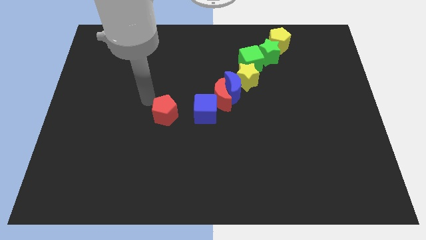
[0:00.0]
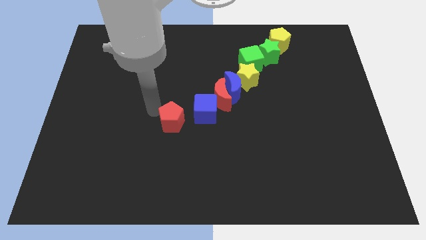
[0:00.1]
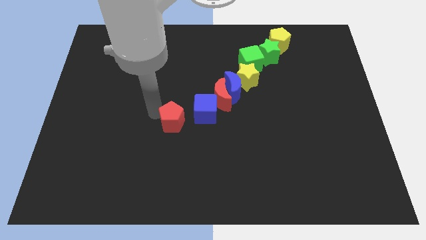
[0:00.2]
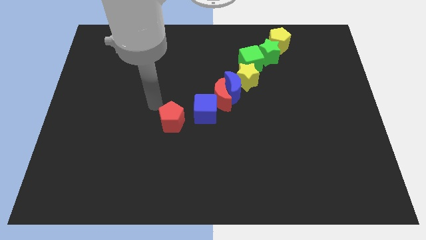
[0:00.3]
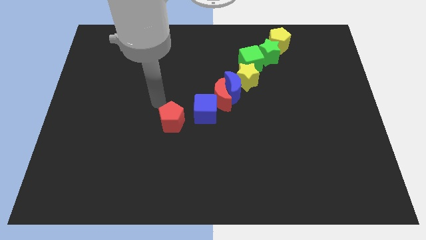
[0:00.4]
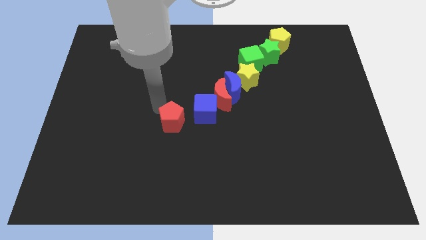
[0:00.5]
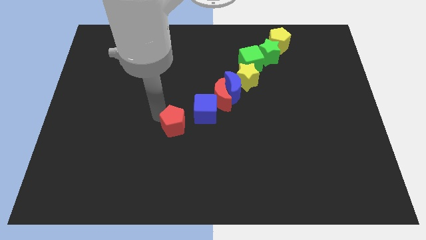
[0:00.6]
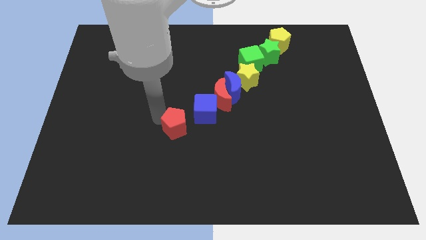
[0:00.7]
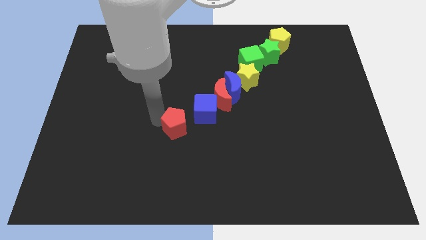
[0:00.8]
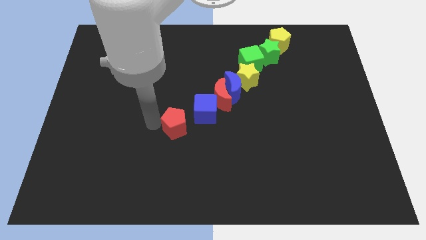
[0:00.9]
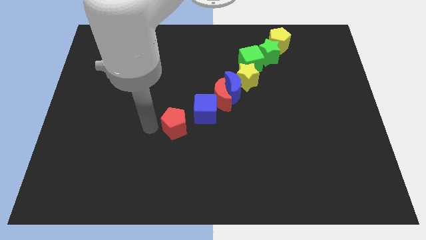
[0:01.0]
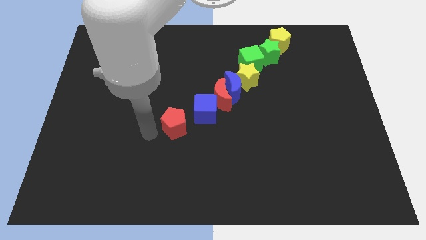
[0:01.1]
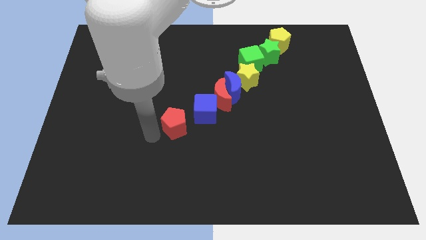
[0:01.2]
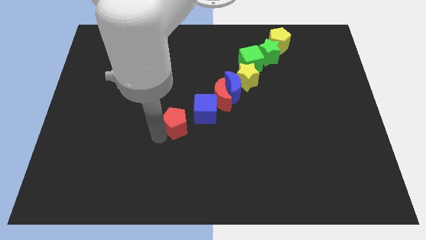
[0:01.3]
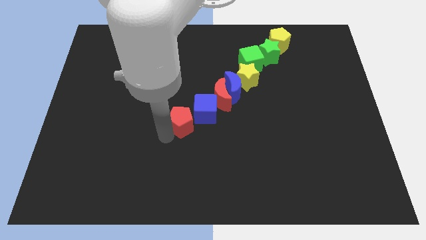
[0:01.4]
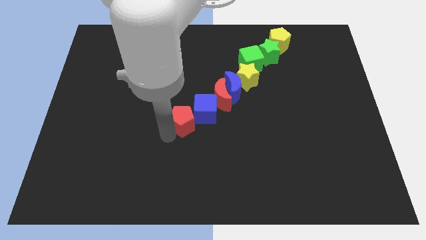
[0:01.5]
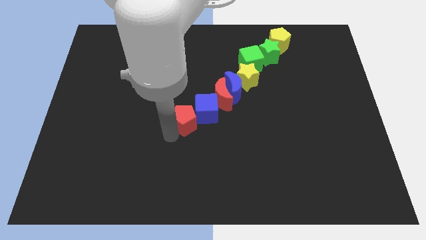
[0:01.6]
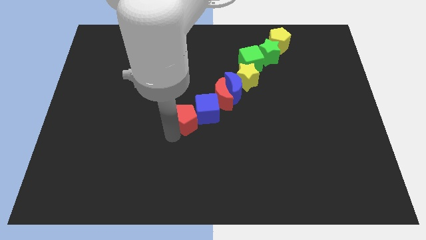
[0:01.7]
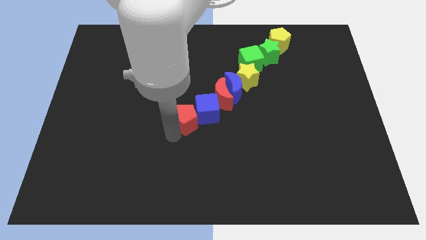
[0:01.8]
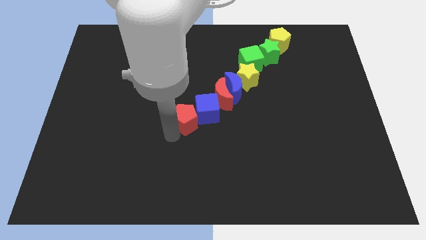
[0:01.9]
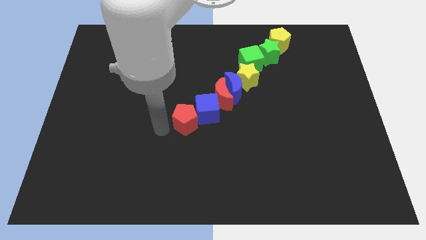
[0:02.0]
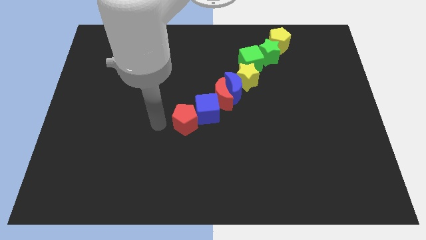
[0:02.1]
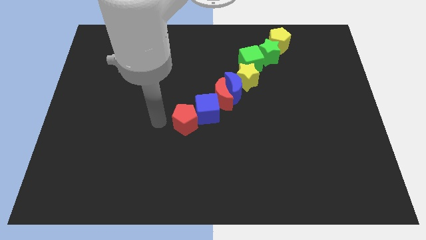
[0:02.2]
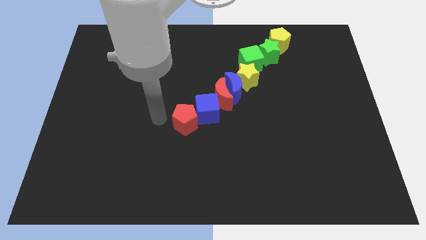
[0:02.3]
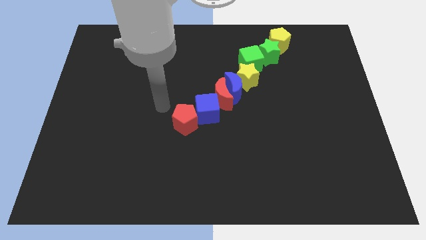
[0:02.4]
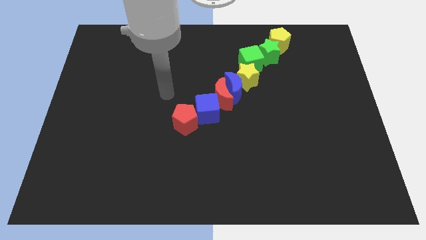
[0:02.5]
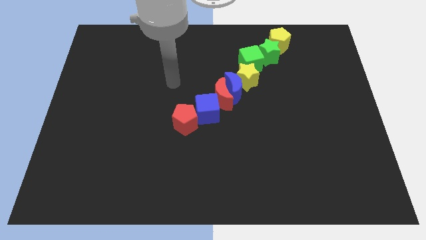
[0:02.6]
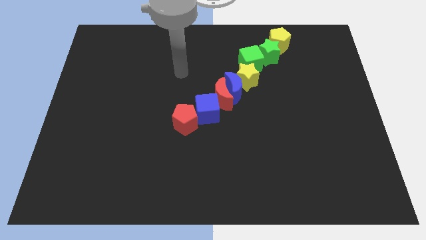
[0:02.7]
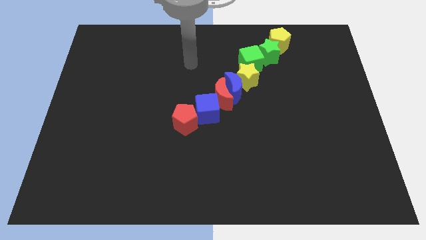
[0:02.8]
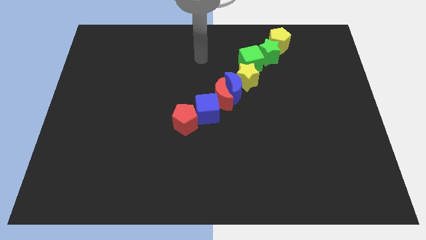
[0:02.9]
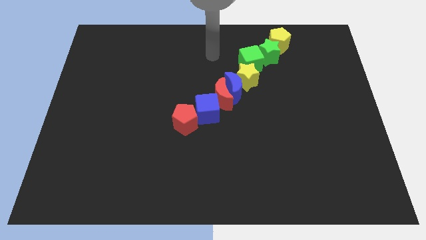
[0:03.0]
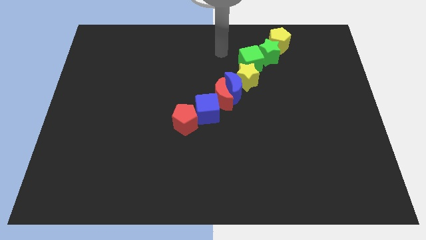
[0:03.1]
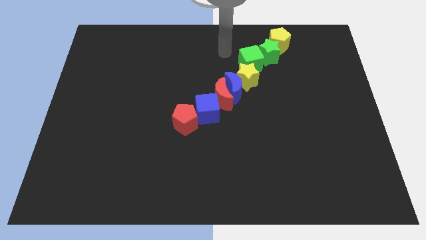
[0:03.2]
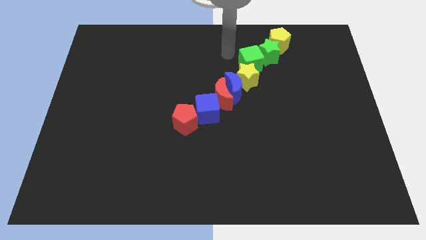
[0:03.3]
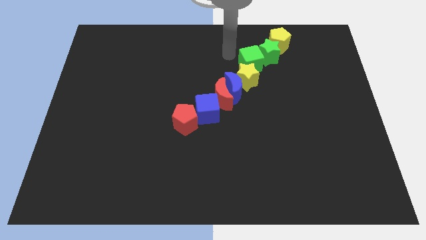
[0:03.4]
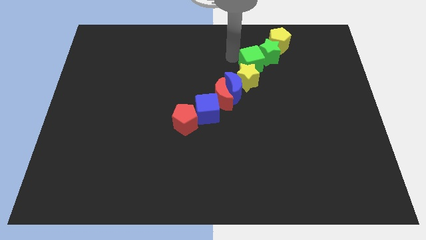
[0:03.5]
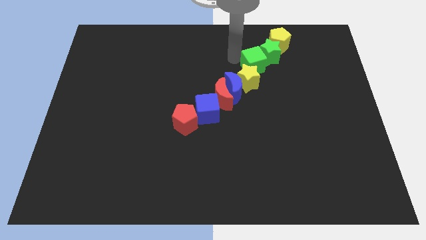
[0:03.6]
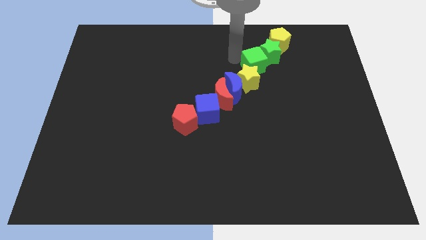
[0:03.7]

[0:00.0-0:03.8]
move your arm towards the green cube

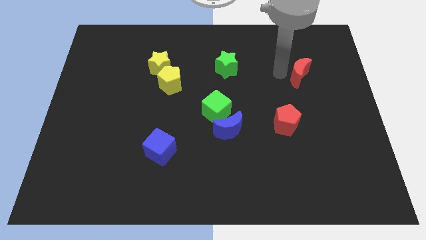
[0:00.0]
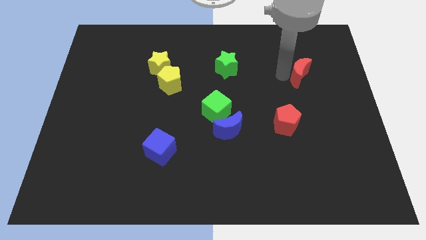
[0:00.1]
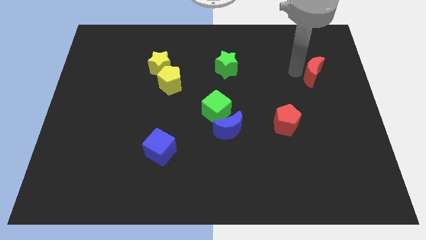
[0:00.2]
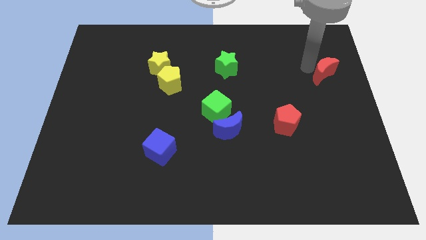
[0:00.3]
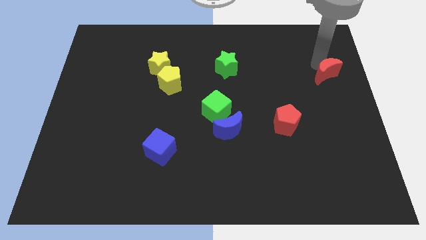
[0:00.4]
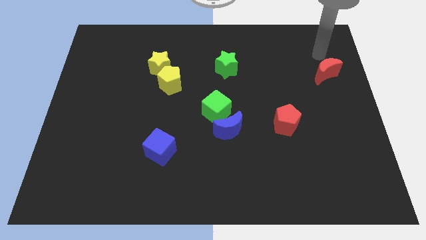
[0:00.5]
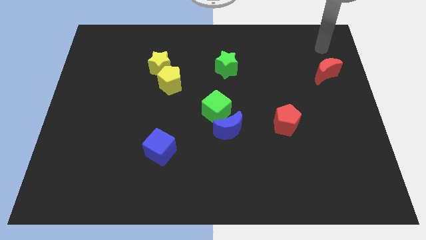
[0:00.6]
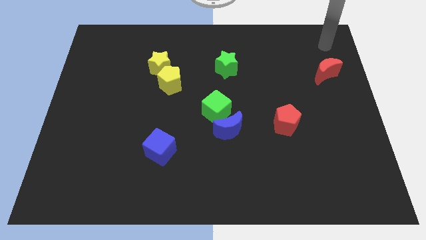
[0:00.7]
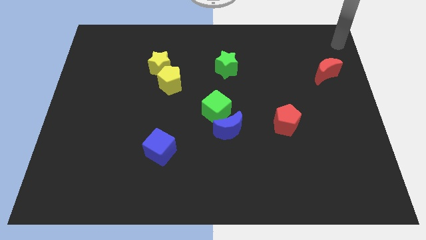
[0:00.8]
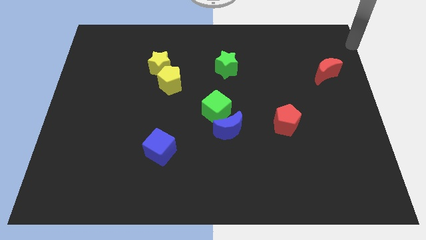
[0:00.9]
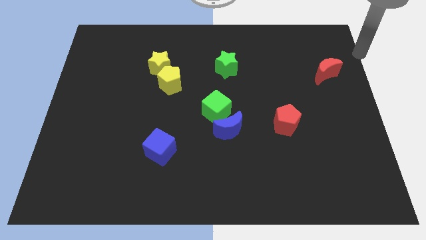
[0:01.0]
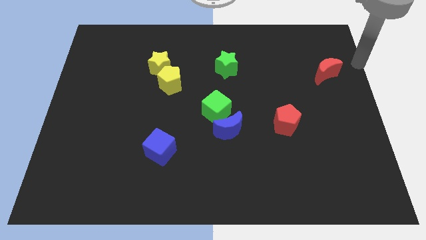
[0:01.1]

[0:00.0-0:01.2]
move red moon to the right

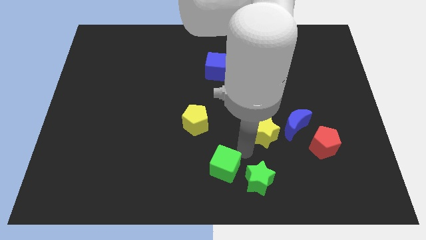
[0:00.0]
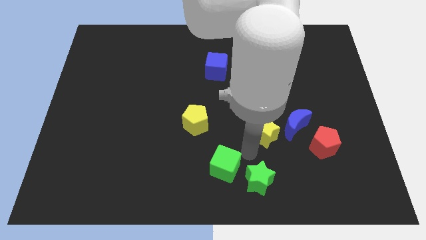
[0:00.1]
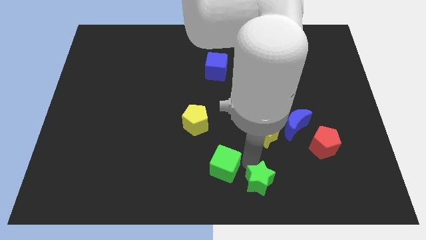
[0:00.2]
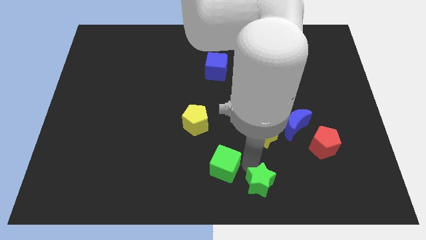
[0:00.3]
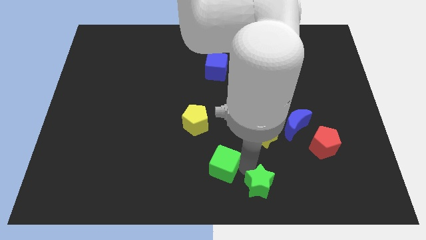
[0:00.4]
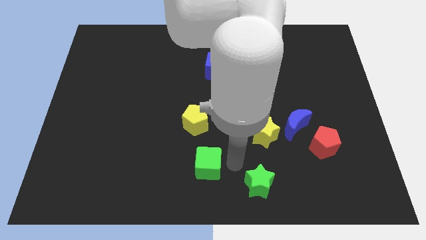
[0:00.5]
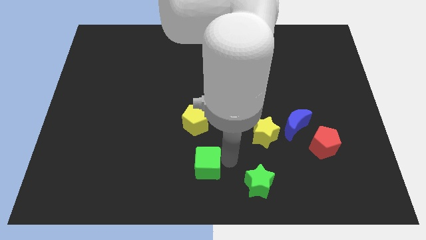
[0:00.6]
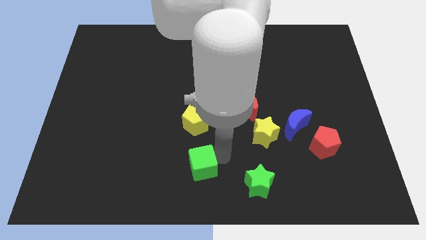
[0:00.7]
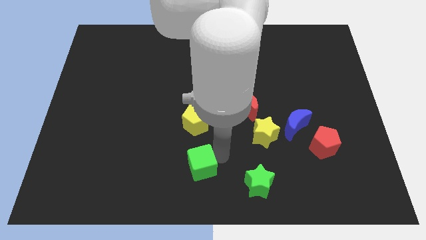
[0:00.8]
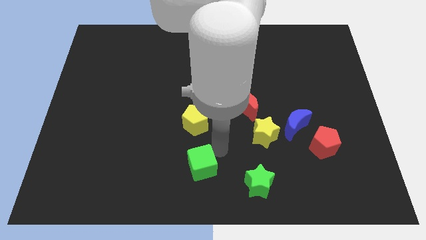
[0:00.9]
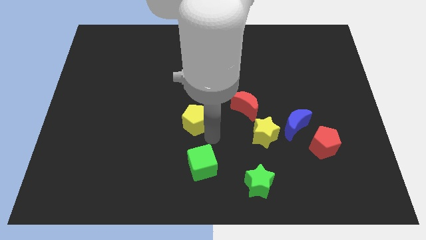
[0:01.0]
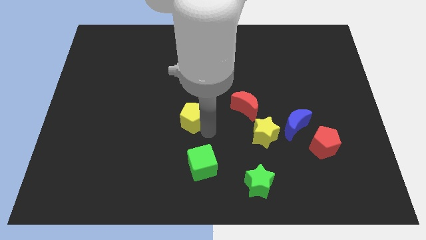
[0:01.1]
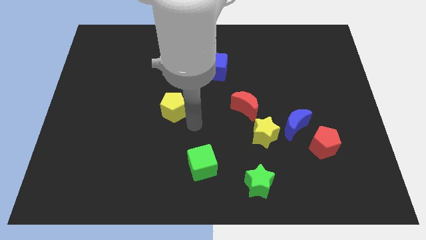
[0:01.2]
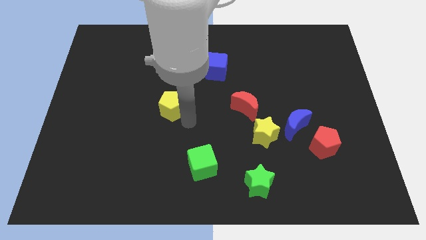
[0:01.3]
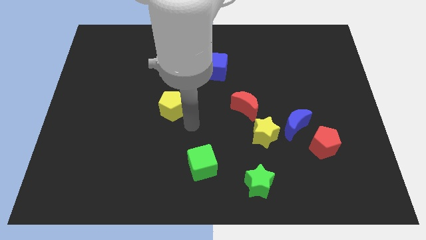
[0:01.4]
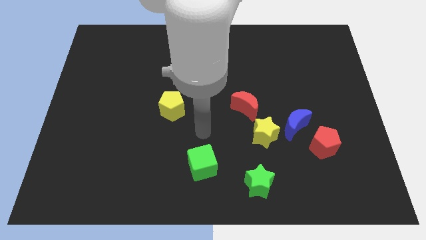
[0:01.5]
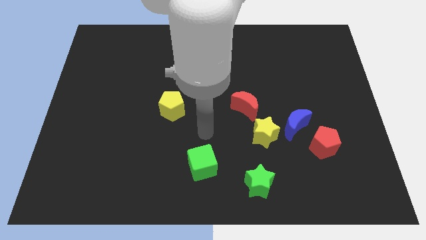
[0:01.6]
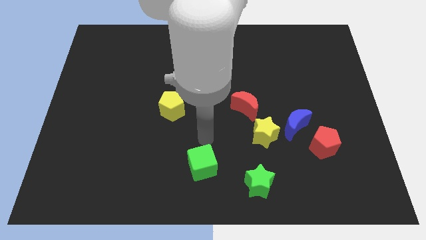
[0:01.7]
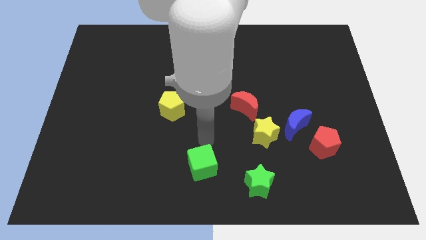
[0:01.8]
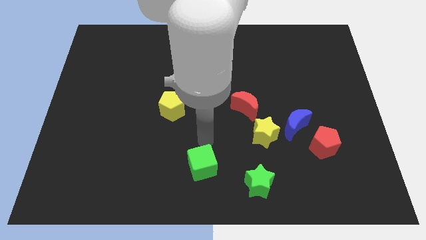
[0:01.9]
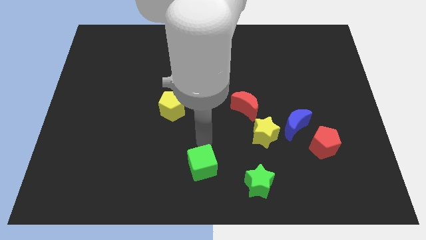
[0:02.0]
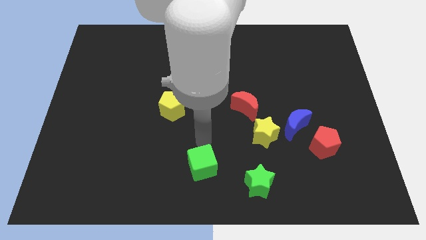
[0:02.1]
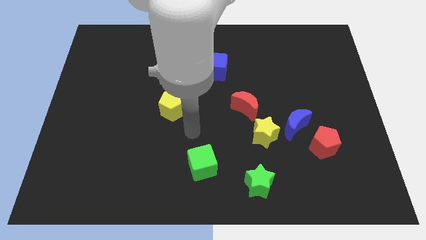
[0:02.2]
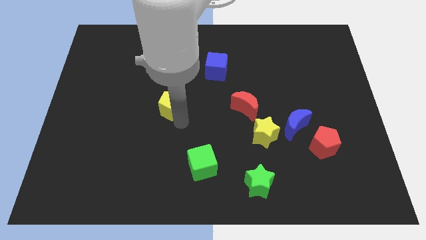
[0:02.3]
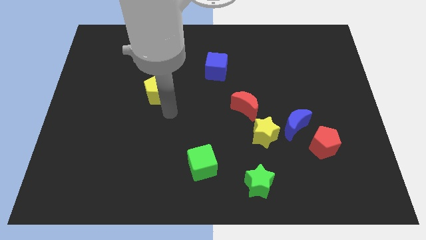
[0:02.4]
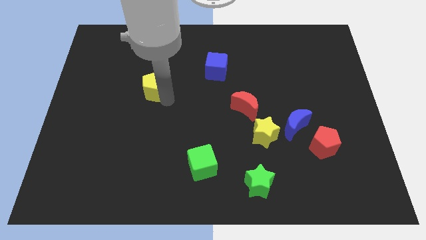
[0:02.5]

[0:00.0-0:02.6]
drag the yellow pentagon slightly upwards

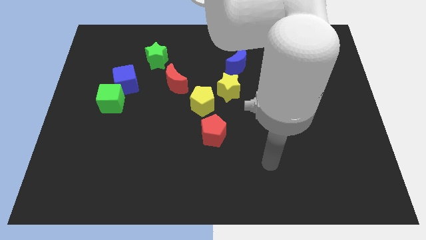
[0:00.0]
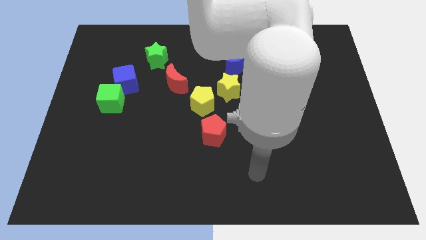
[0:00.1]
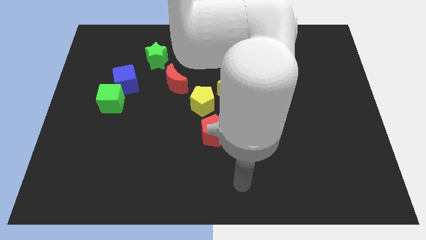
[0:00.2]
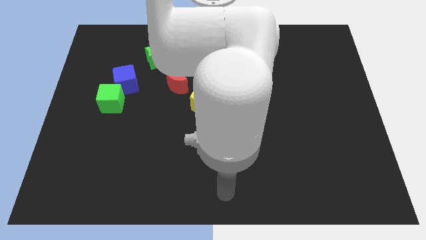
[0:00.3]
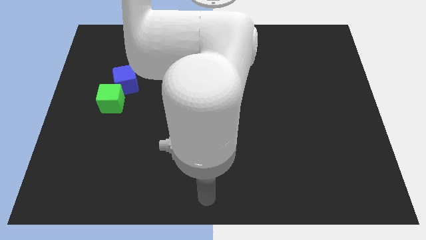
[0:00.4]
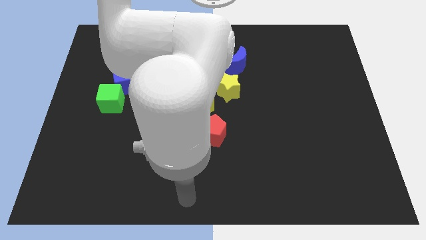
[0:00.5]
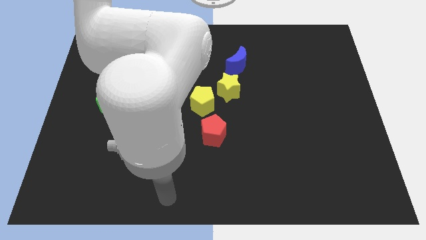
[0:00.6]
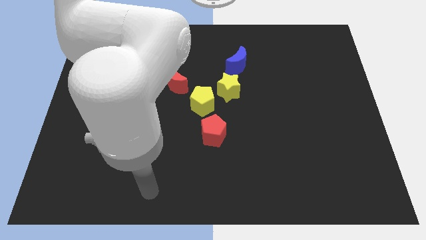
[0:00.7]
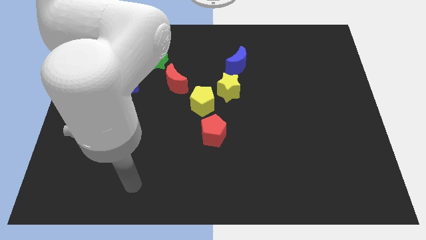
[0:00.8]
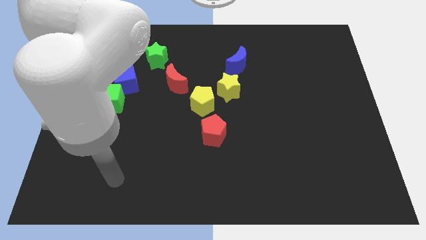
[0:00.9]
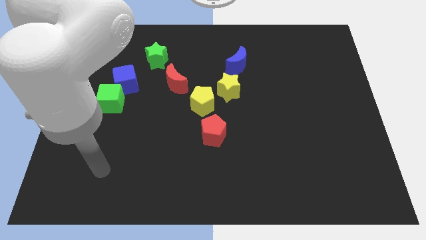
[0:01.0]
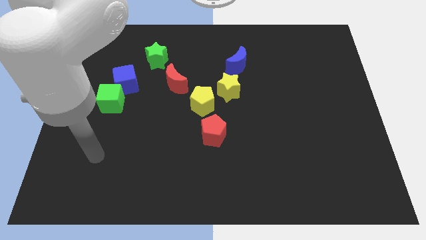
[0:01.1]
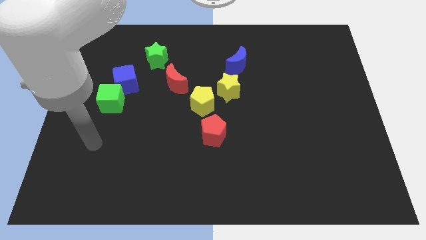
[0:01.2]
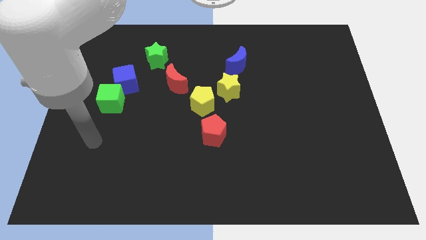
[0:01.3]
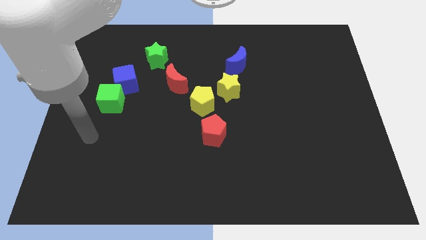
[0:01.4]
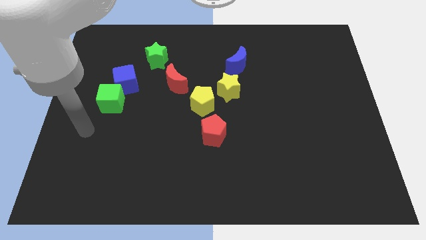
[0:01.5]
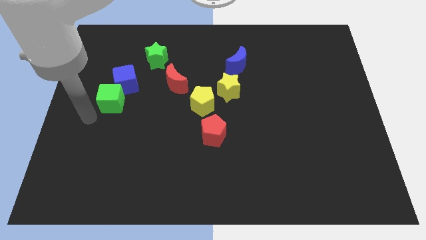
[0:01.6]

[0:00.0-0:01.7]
point your hand at the bottom left side of the green cube
